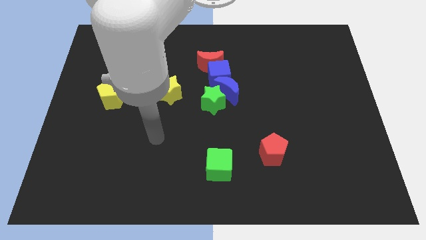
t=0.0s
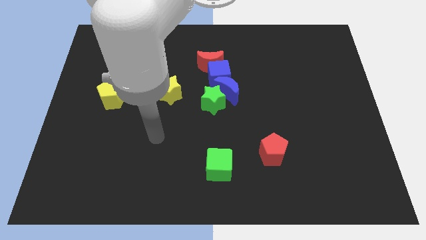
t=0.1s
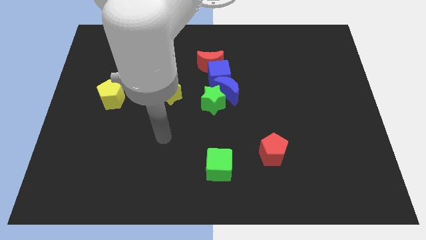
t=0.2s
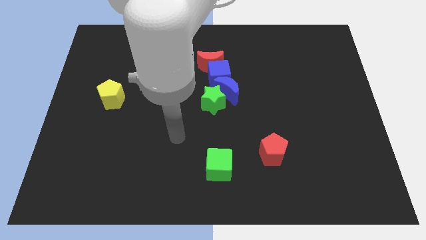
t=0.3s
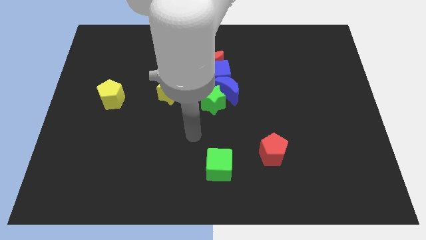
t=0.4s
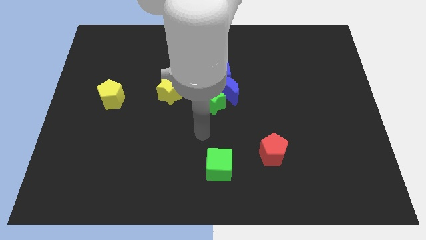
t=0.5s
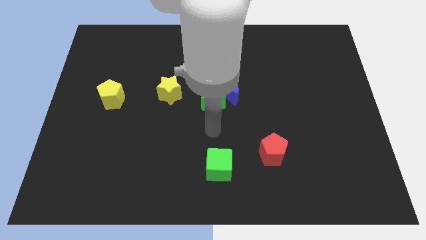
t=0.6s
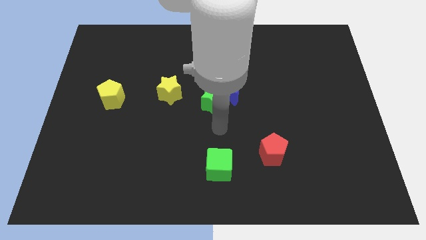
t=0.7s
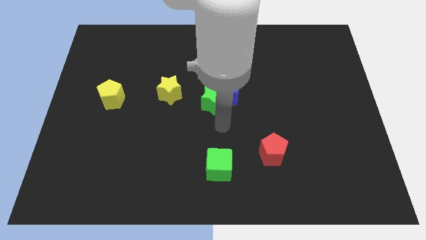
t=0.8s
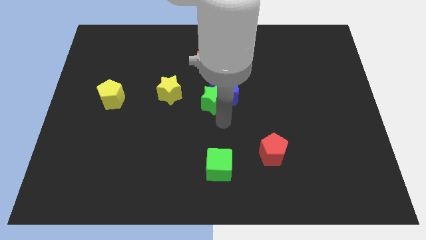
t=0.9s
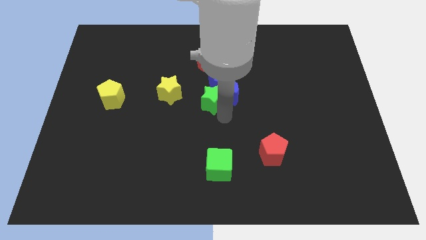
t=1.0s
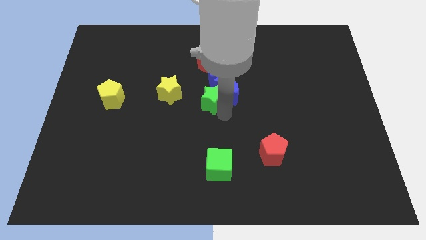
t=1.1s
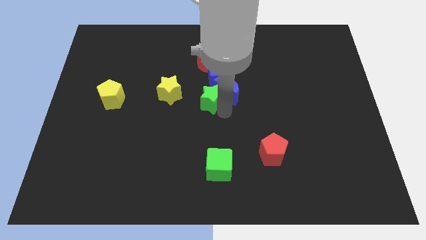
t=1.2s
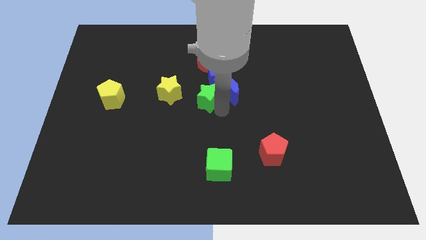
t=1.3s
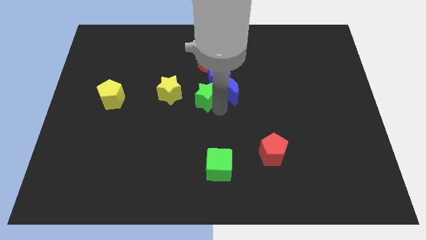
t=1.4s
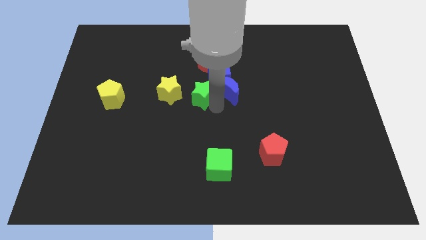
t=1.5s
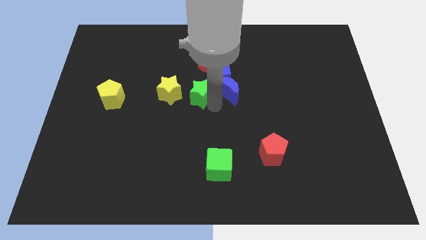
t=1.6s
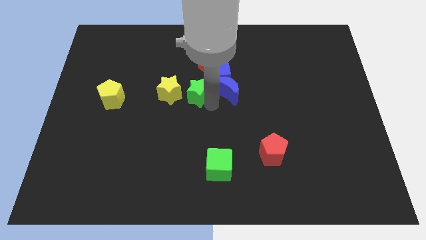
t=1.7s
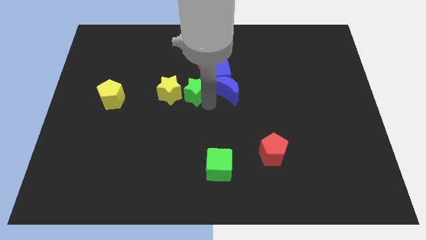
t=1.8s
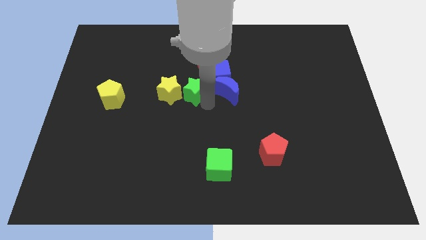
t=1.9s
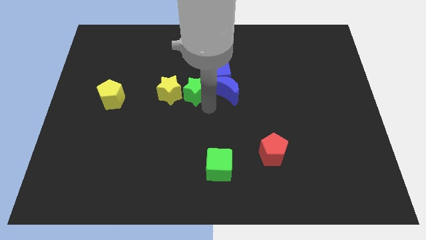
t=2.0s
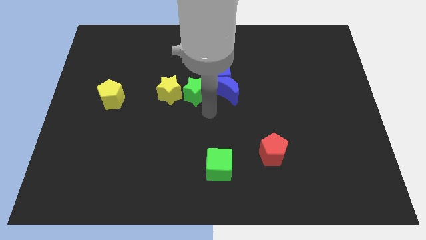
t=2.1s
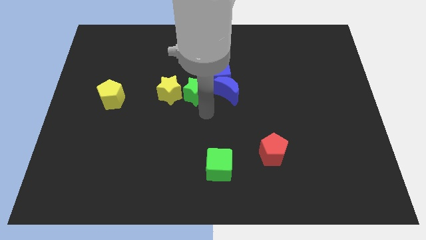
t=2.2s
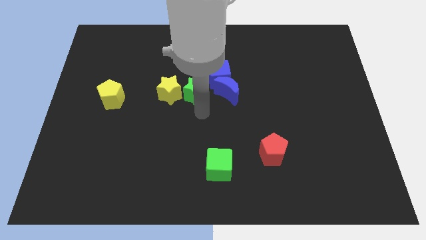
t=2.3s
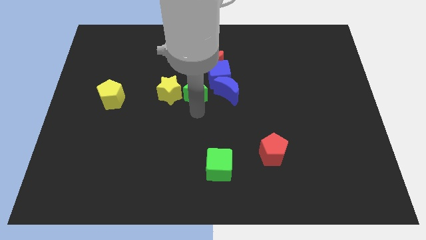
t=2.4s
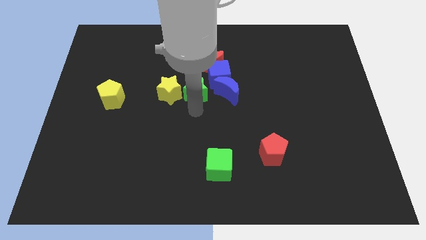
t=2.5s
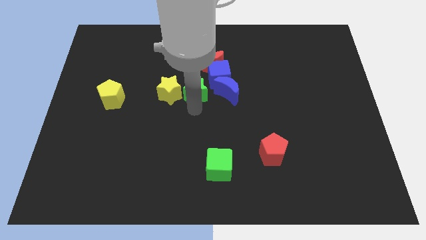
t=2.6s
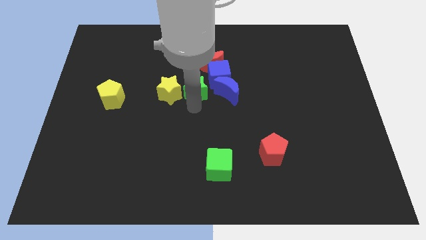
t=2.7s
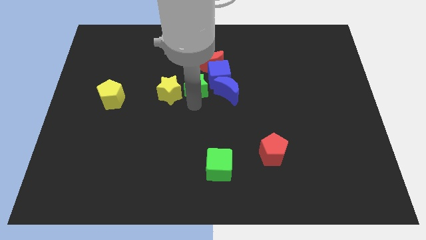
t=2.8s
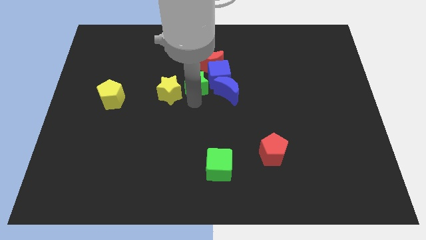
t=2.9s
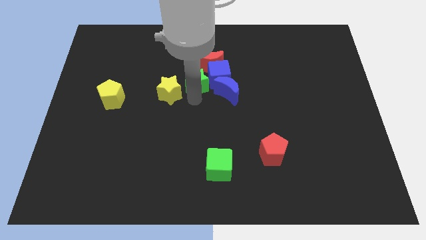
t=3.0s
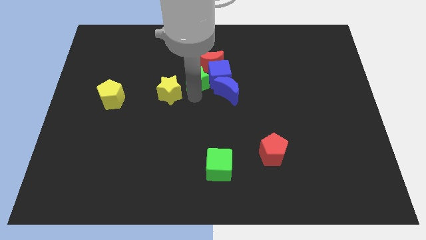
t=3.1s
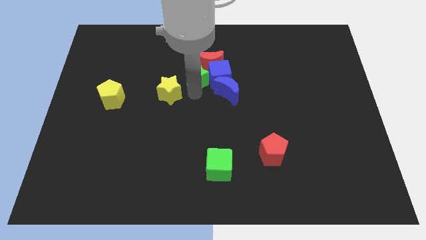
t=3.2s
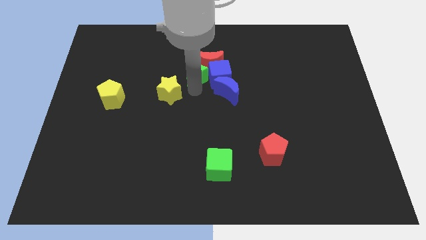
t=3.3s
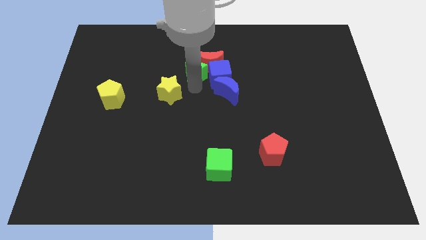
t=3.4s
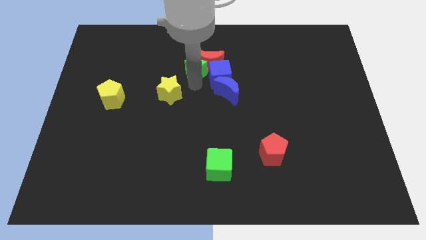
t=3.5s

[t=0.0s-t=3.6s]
push the green star towards the red moon

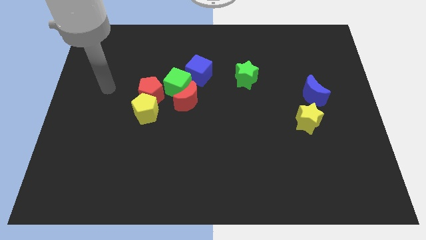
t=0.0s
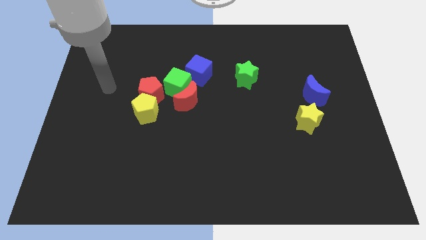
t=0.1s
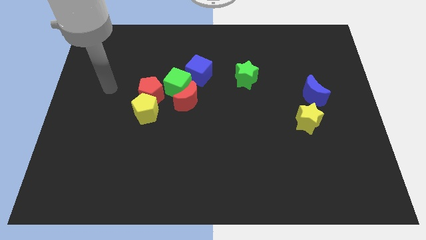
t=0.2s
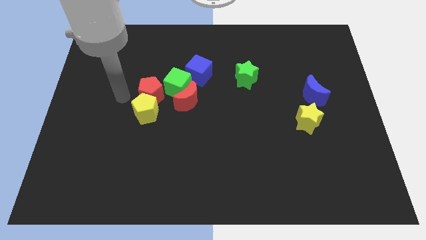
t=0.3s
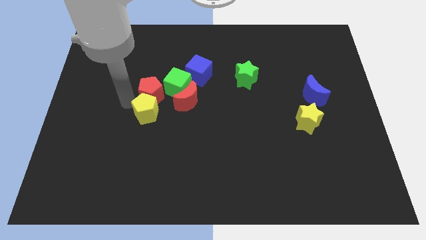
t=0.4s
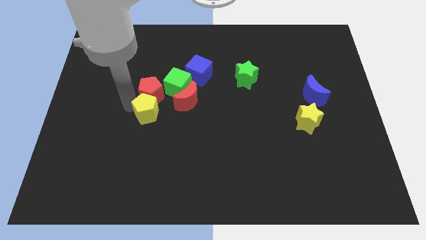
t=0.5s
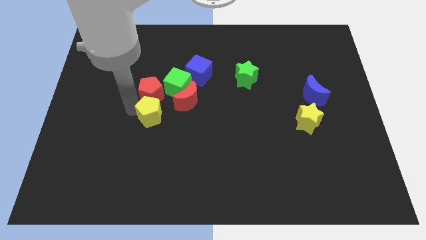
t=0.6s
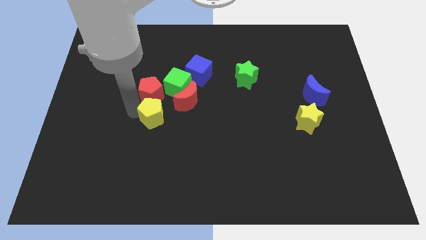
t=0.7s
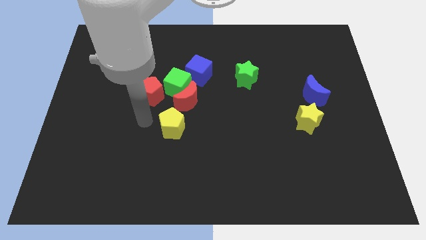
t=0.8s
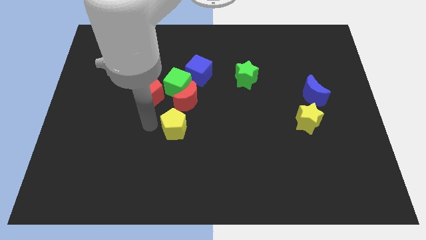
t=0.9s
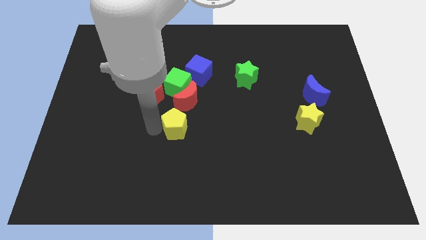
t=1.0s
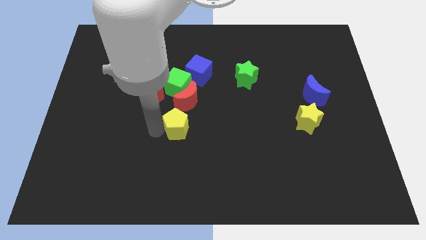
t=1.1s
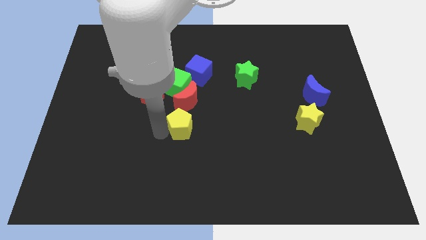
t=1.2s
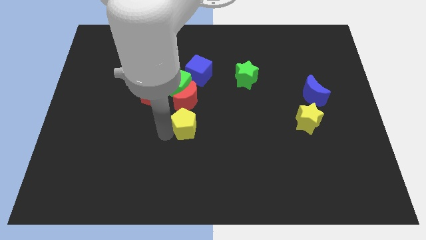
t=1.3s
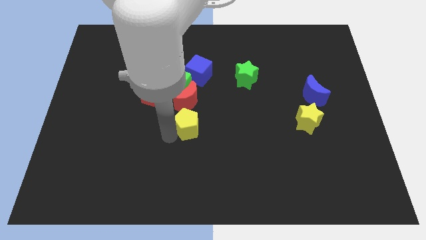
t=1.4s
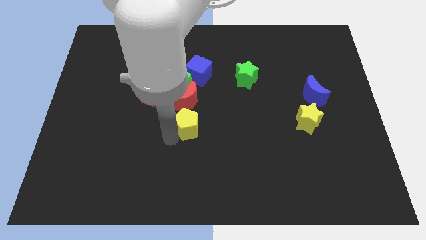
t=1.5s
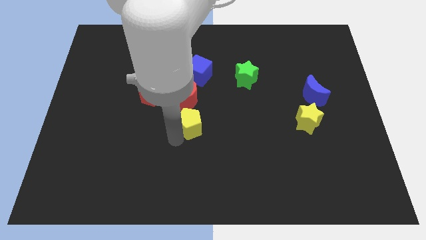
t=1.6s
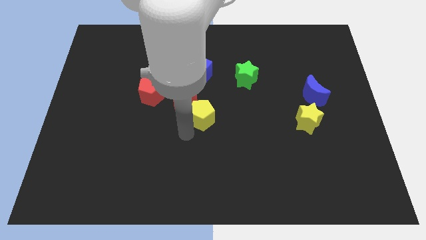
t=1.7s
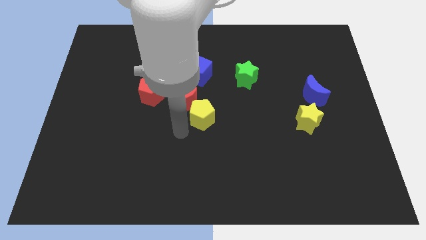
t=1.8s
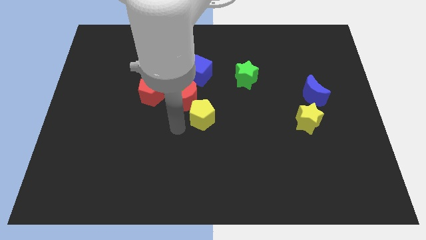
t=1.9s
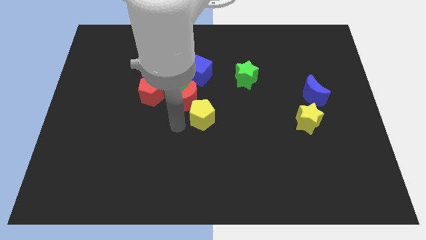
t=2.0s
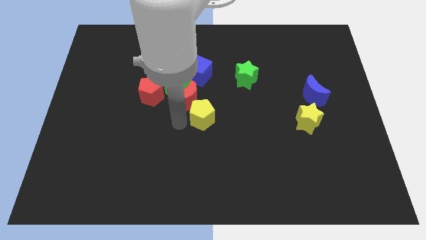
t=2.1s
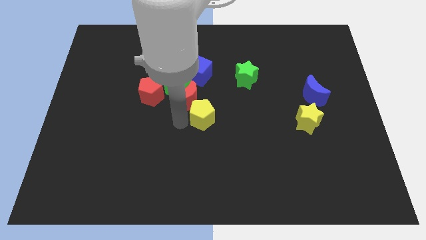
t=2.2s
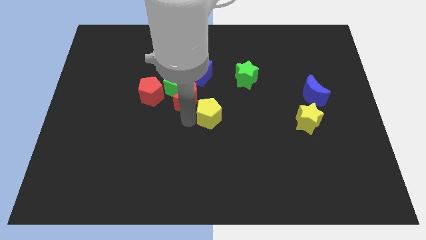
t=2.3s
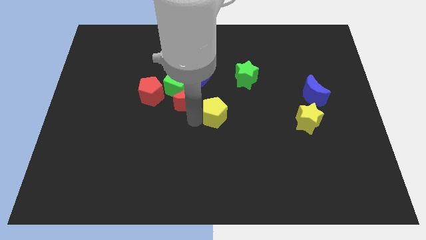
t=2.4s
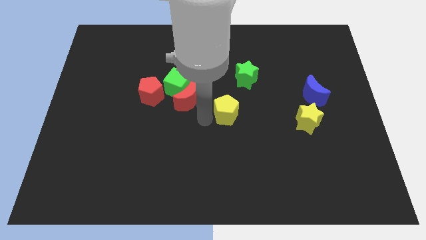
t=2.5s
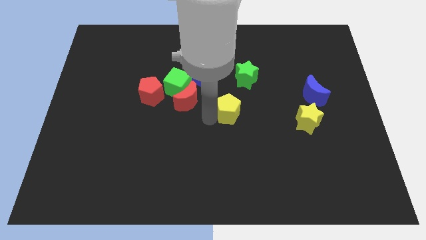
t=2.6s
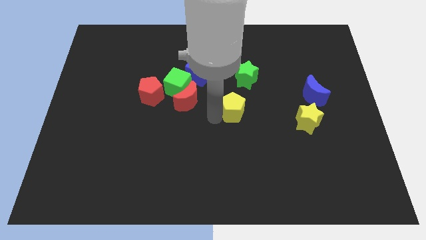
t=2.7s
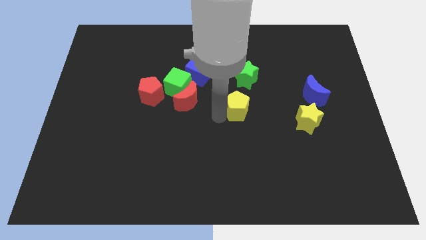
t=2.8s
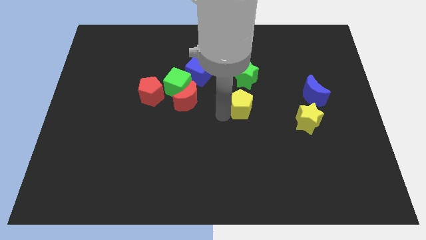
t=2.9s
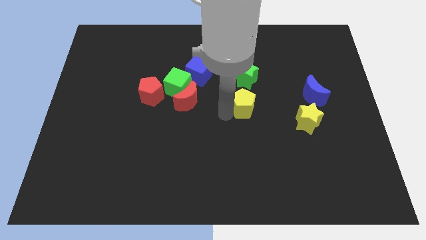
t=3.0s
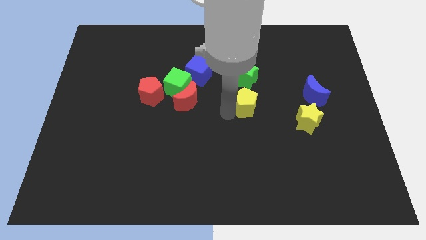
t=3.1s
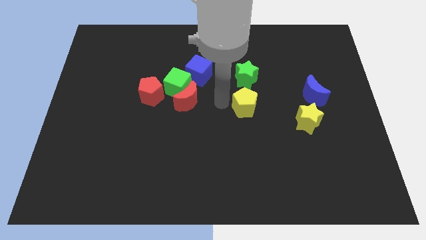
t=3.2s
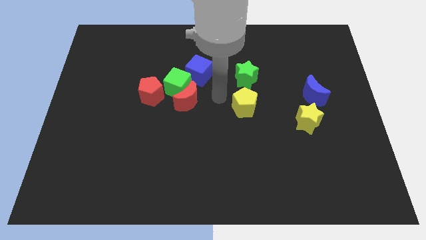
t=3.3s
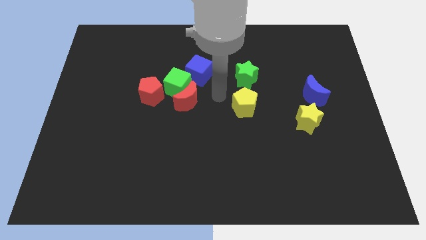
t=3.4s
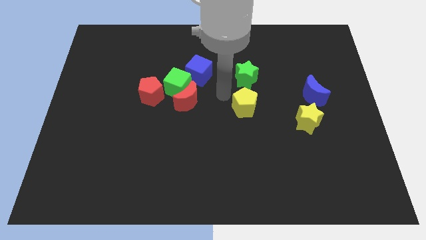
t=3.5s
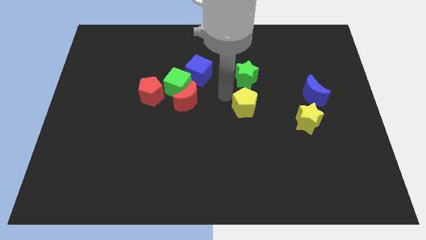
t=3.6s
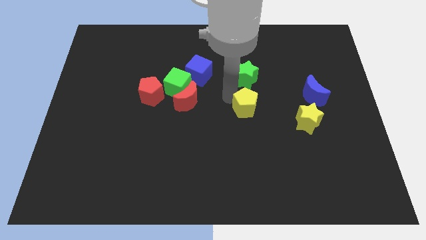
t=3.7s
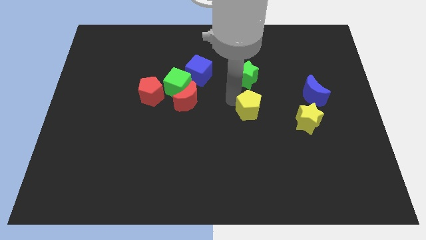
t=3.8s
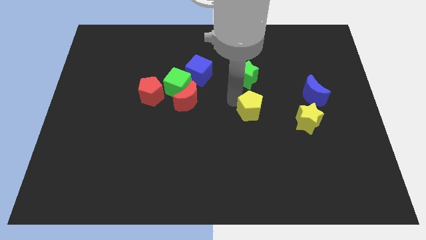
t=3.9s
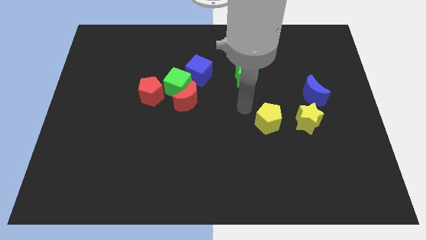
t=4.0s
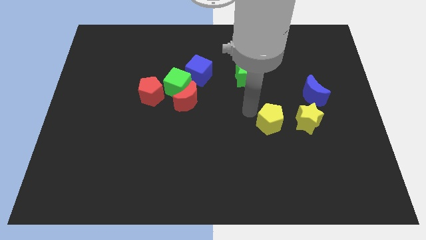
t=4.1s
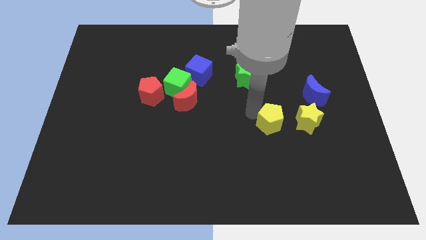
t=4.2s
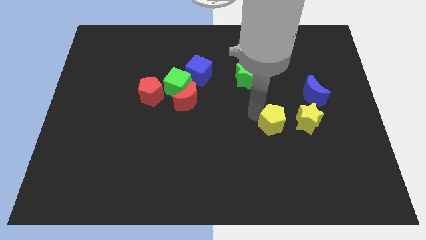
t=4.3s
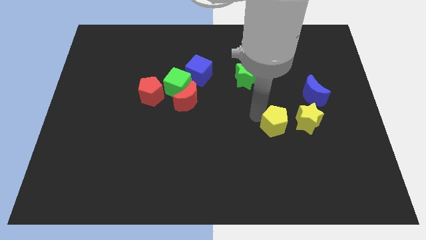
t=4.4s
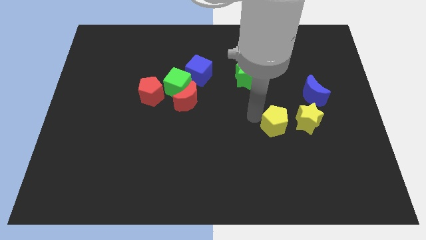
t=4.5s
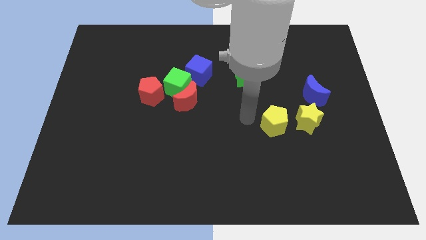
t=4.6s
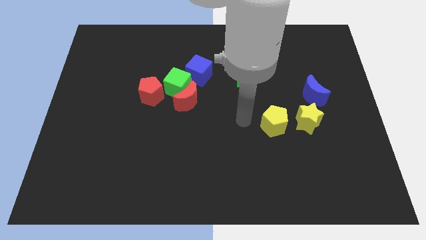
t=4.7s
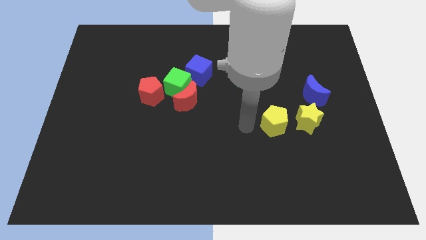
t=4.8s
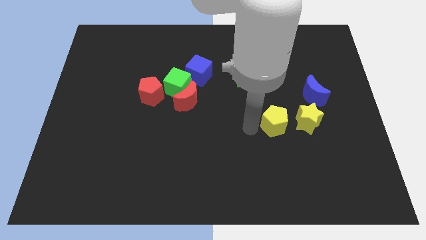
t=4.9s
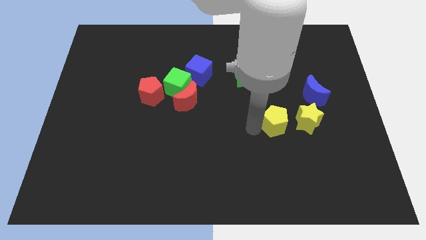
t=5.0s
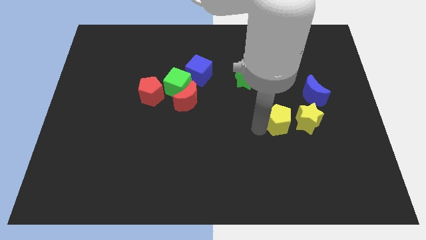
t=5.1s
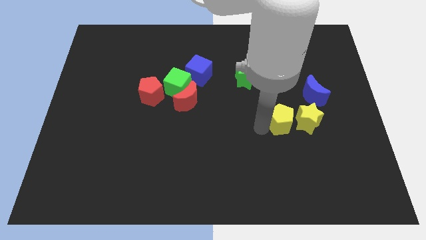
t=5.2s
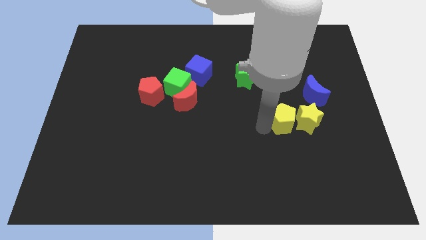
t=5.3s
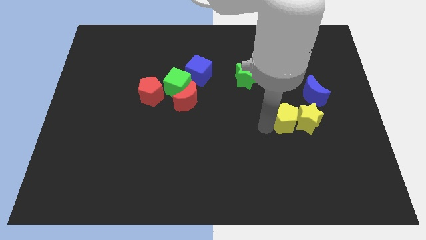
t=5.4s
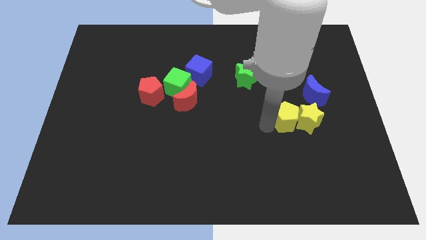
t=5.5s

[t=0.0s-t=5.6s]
slide the yellow pentagon to the yellow star
